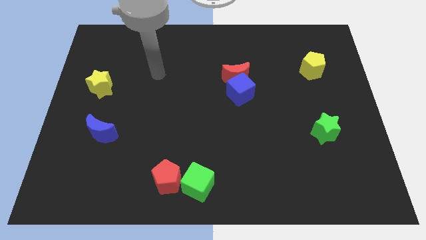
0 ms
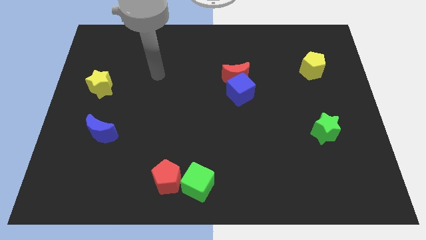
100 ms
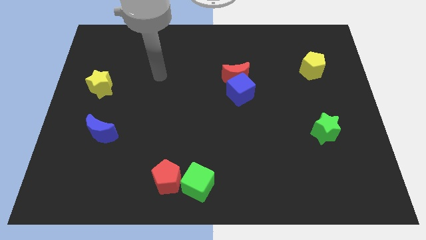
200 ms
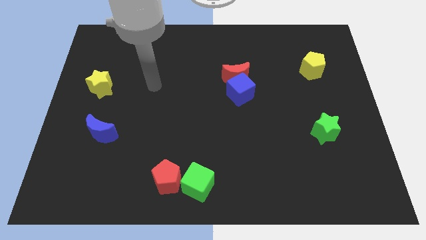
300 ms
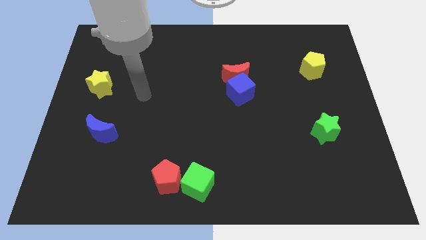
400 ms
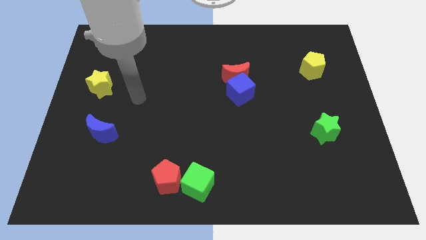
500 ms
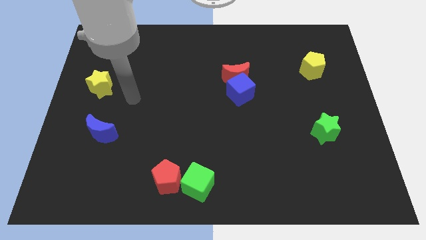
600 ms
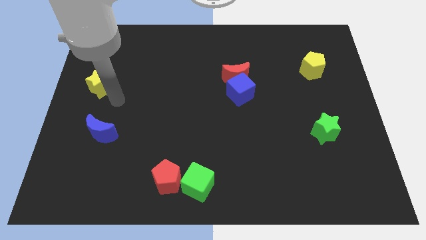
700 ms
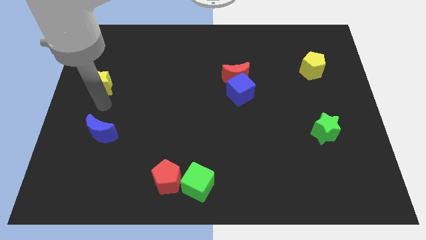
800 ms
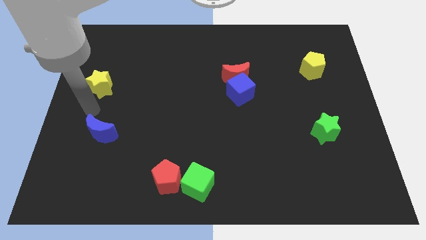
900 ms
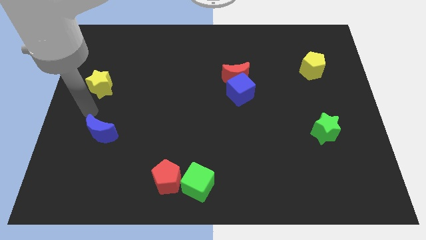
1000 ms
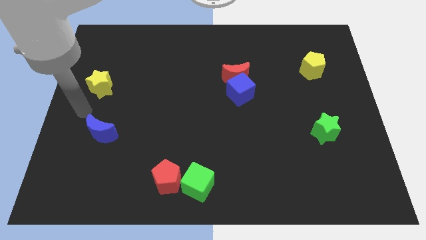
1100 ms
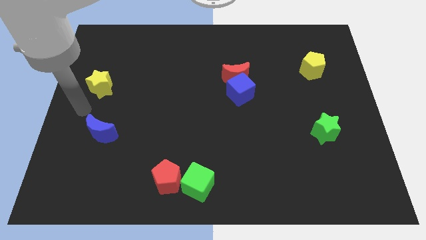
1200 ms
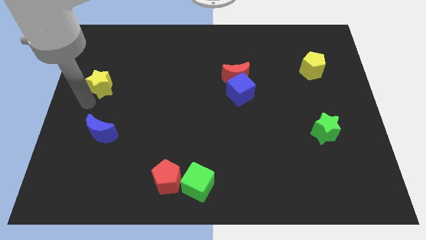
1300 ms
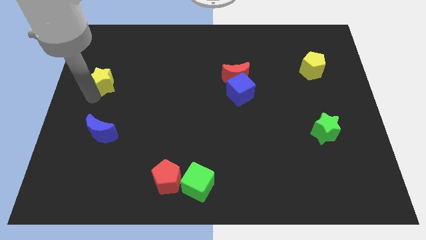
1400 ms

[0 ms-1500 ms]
tap the yellow star

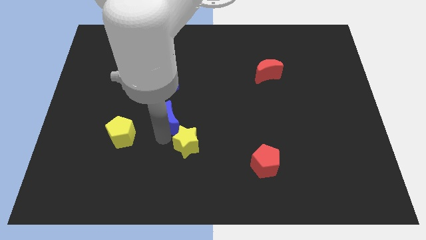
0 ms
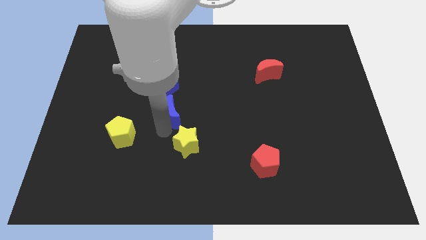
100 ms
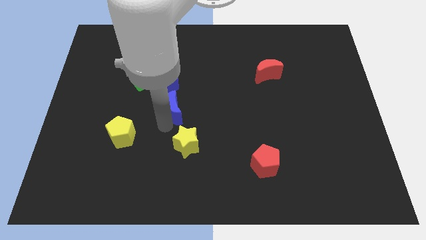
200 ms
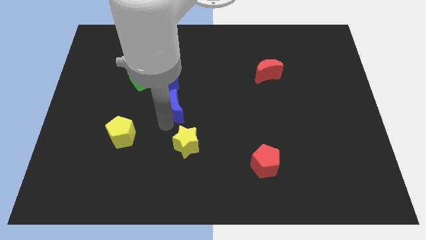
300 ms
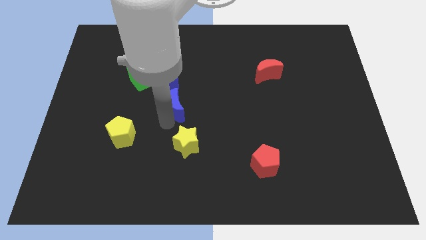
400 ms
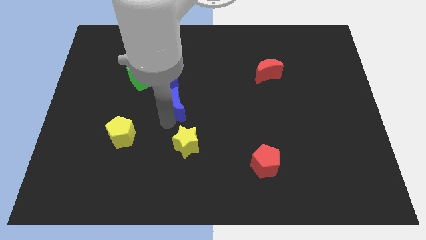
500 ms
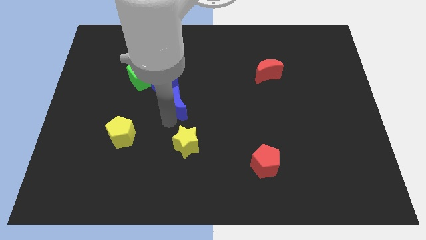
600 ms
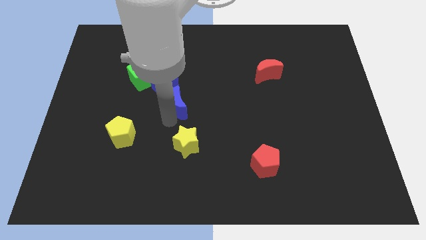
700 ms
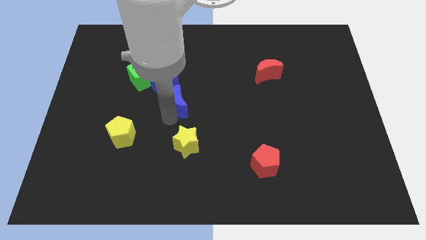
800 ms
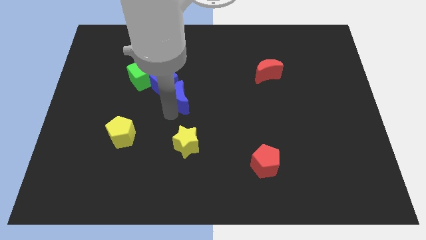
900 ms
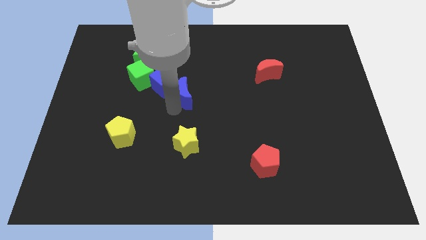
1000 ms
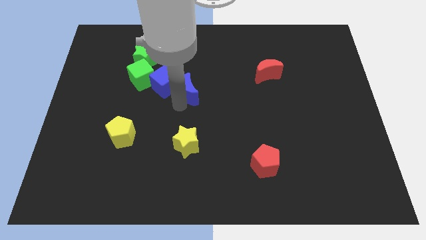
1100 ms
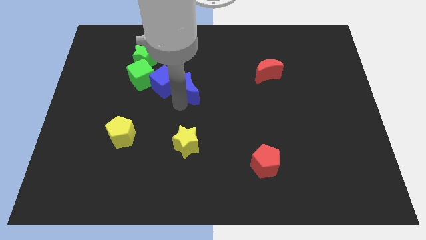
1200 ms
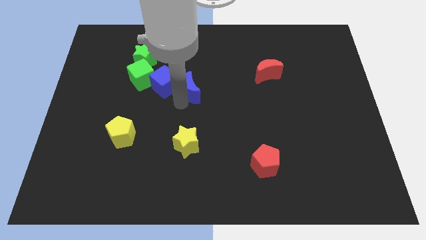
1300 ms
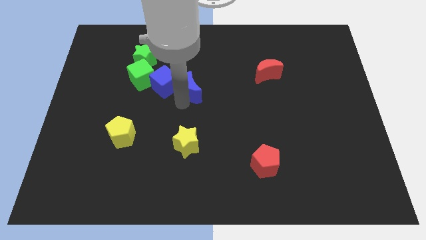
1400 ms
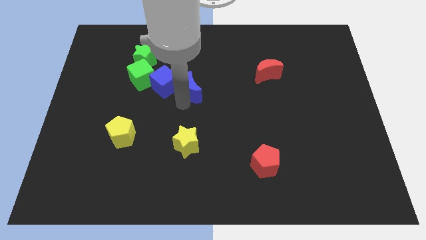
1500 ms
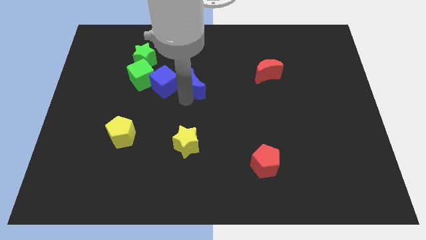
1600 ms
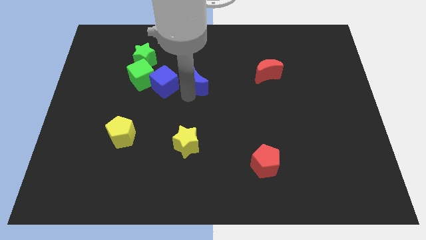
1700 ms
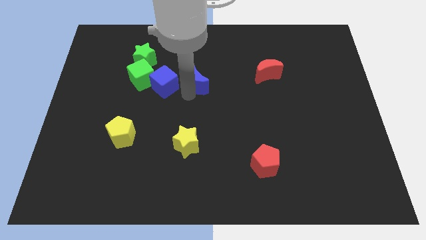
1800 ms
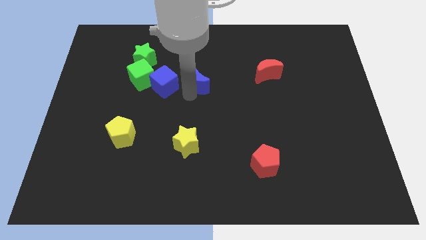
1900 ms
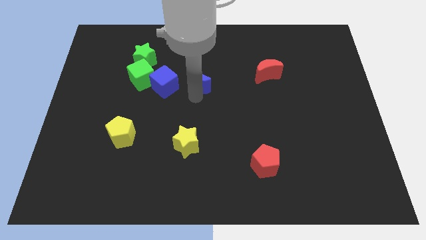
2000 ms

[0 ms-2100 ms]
push the blue moon at the right side of the blue cube

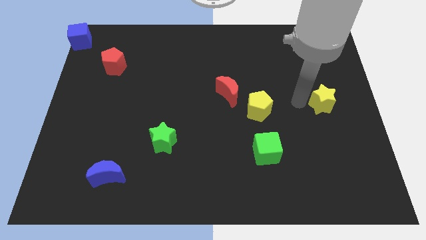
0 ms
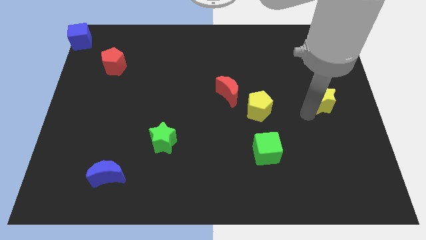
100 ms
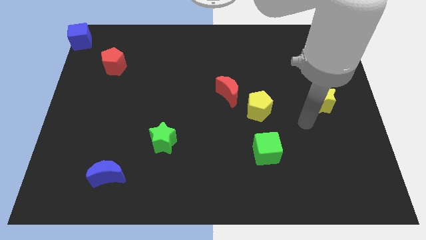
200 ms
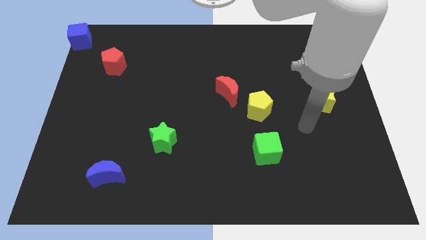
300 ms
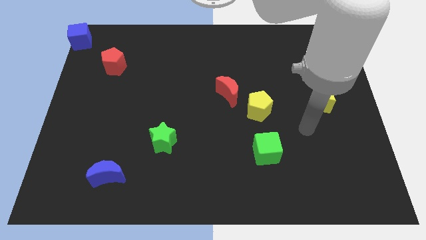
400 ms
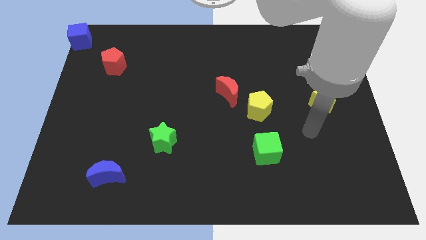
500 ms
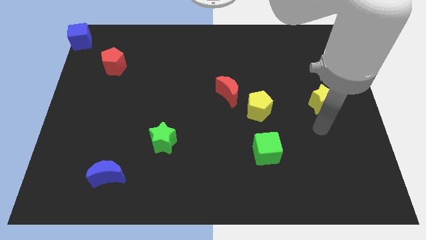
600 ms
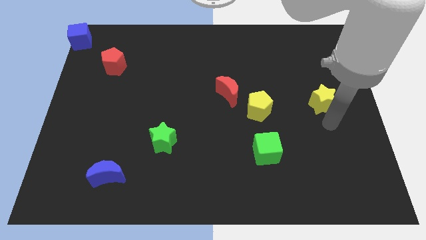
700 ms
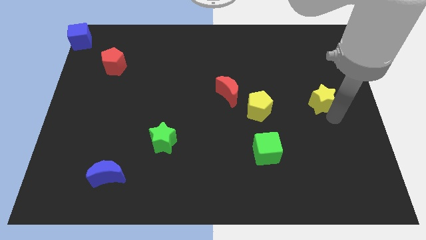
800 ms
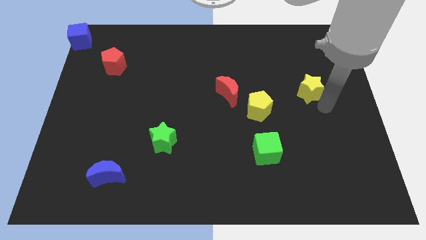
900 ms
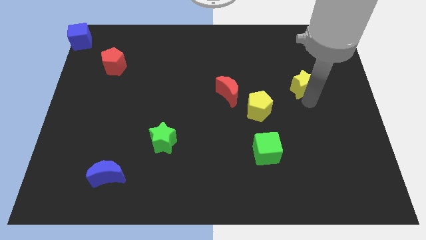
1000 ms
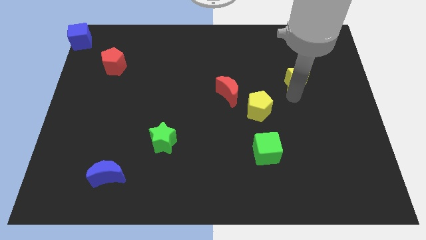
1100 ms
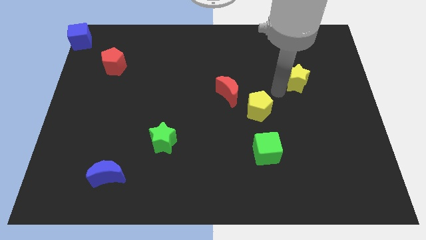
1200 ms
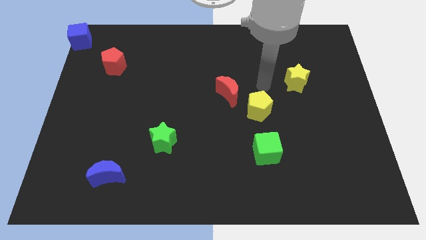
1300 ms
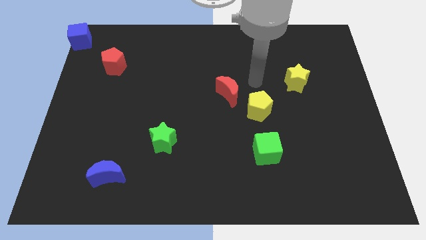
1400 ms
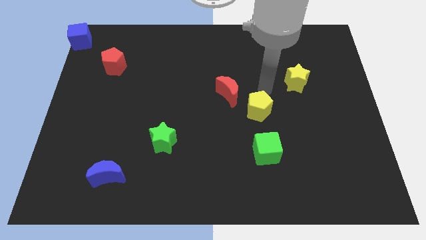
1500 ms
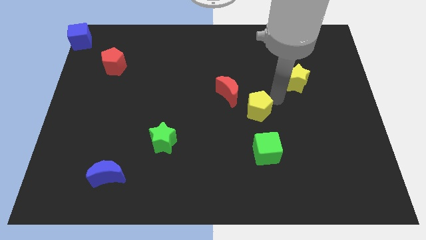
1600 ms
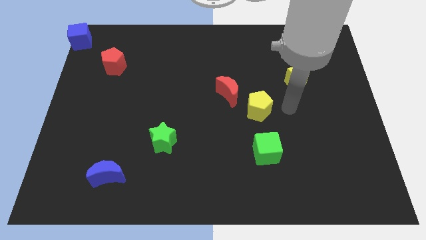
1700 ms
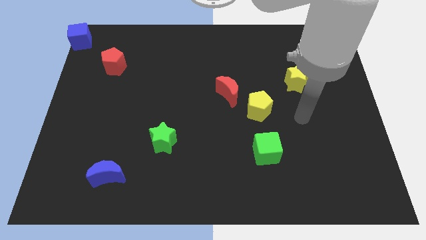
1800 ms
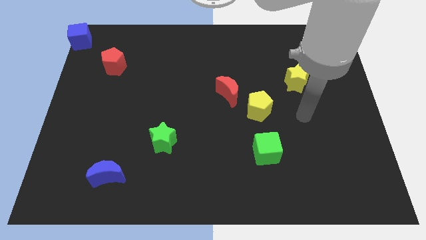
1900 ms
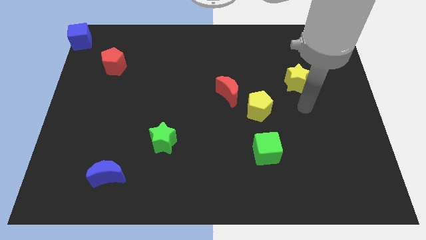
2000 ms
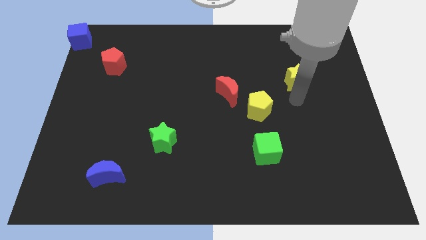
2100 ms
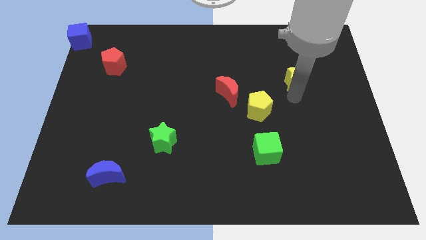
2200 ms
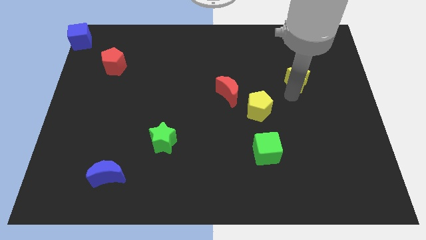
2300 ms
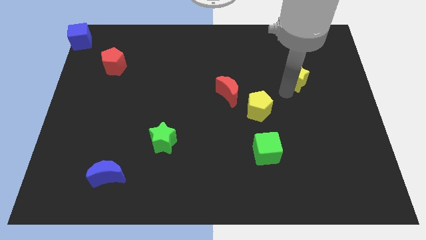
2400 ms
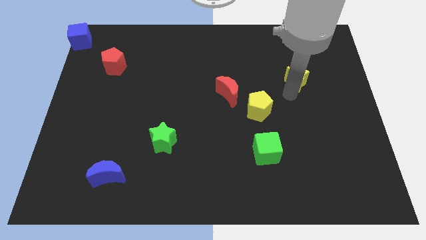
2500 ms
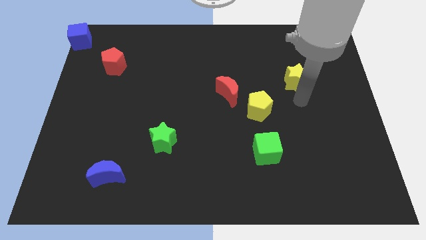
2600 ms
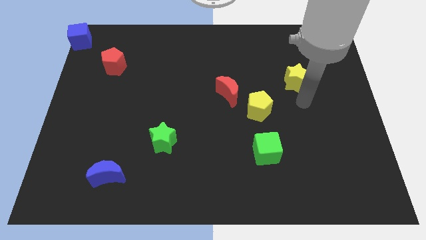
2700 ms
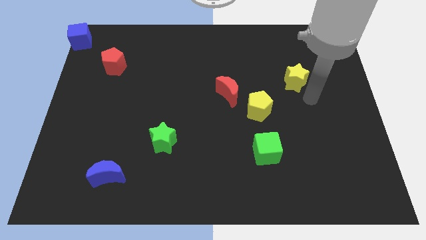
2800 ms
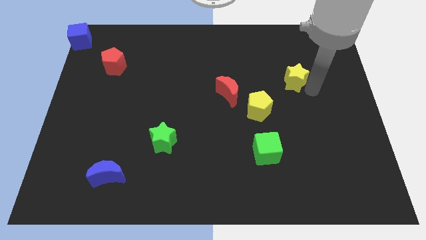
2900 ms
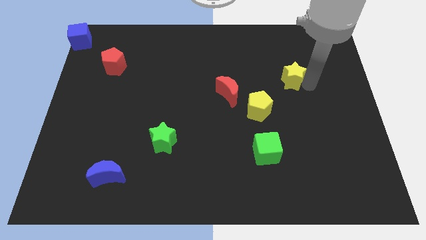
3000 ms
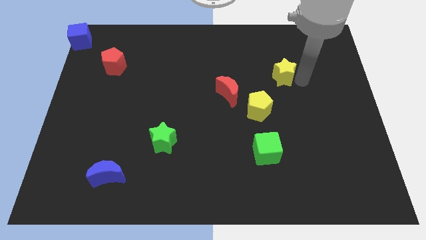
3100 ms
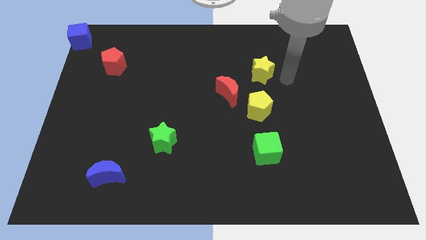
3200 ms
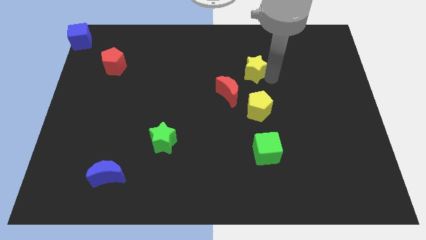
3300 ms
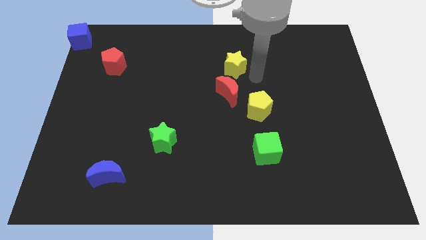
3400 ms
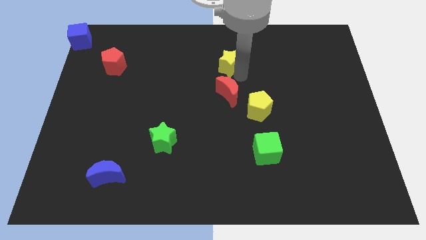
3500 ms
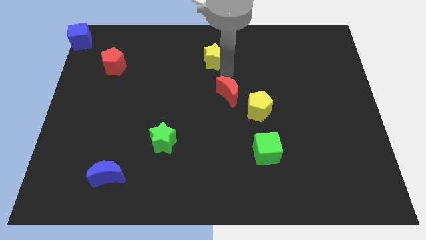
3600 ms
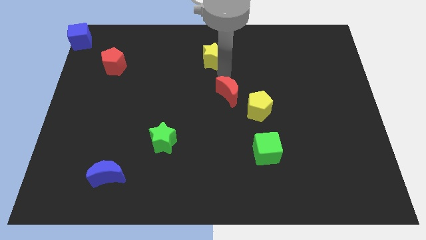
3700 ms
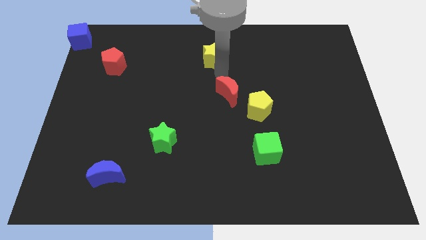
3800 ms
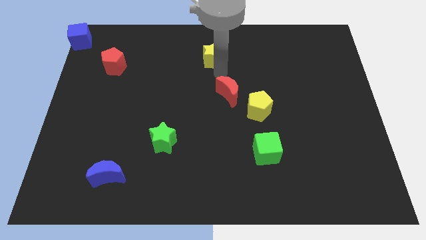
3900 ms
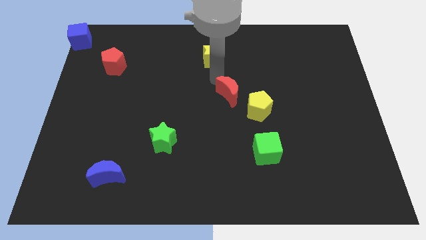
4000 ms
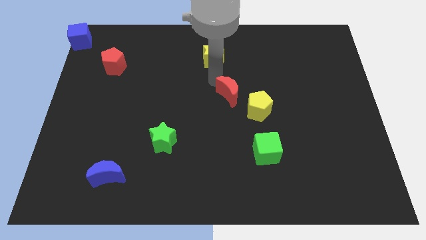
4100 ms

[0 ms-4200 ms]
move yellow star to the top of red crescent

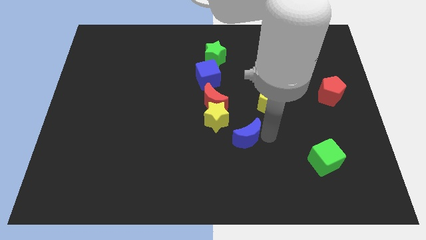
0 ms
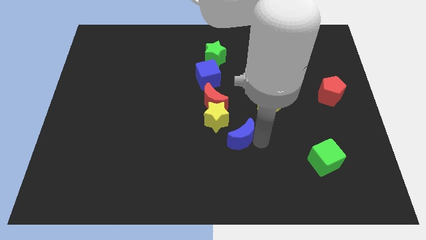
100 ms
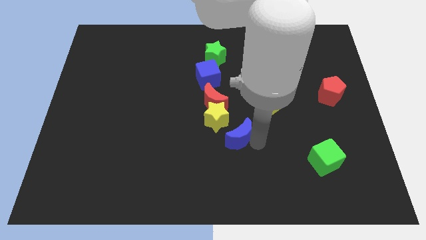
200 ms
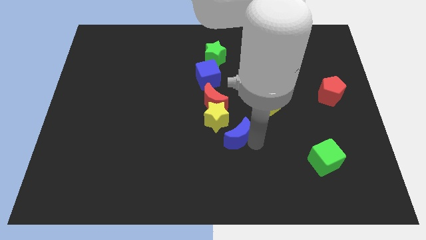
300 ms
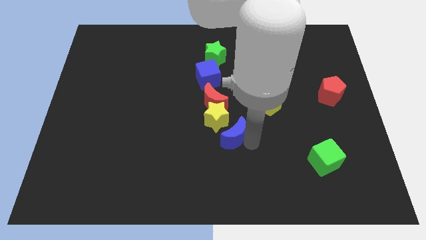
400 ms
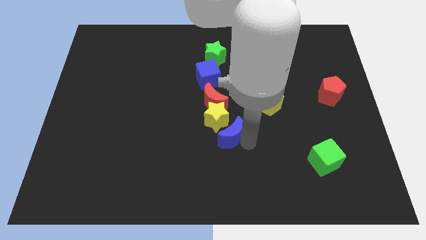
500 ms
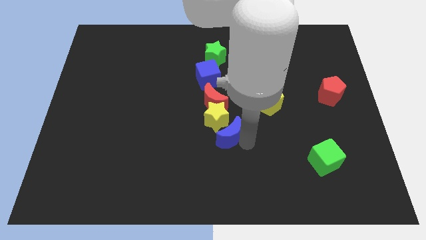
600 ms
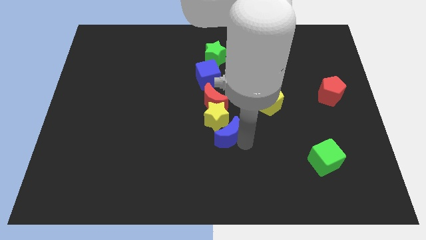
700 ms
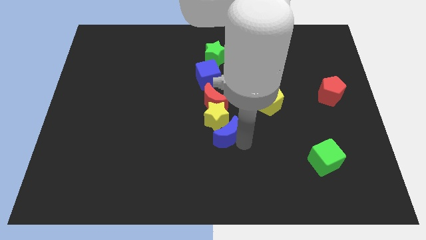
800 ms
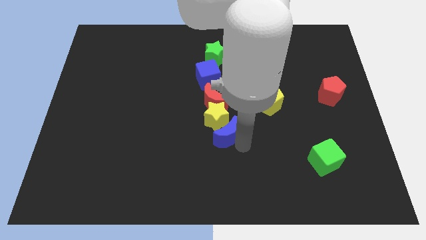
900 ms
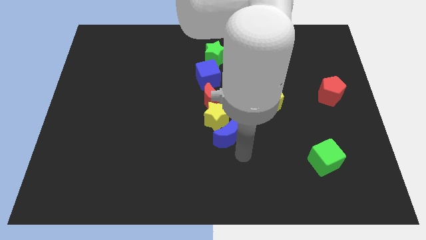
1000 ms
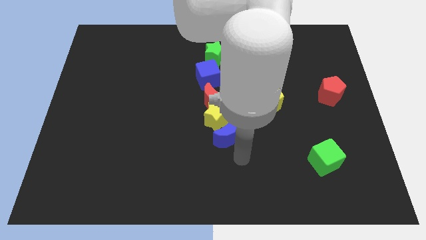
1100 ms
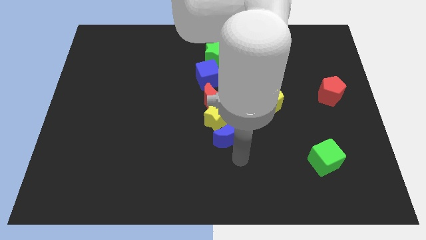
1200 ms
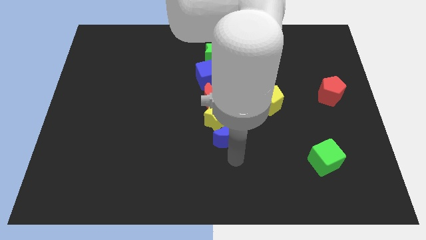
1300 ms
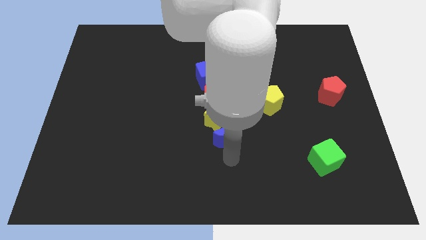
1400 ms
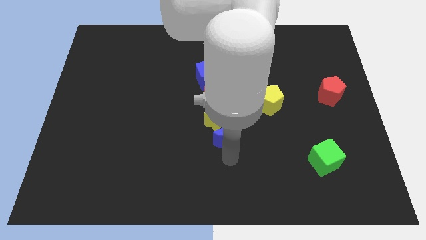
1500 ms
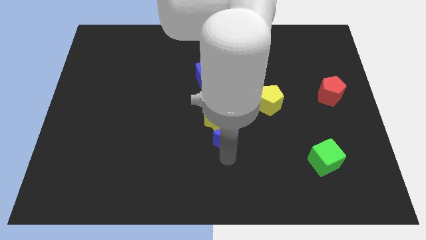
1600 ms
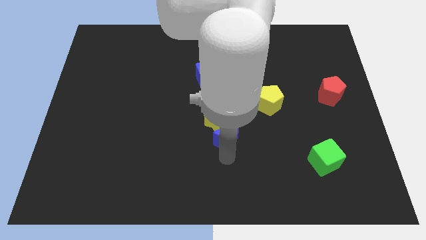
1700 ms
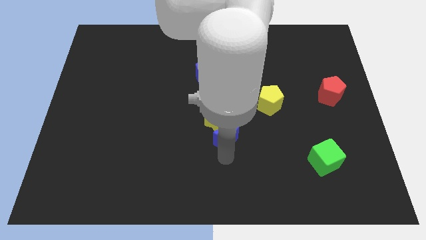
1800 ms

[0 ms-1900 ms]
place the blue crescent below the yellow star
